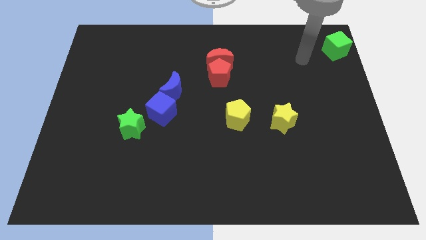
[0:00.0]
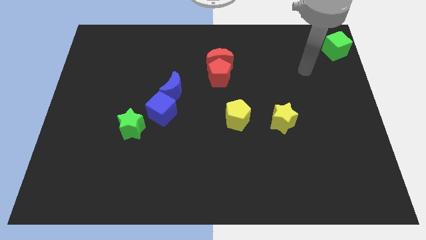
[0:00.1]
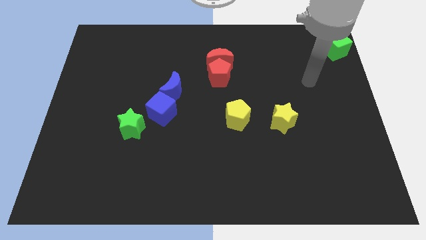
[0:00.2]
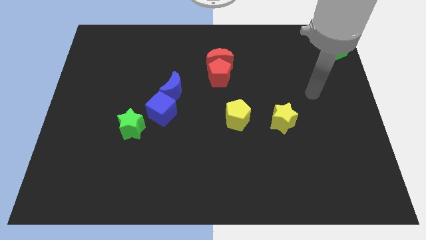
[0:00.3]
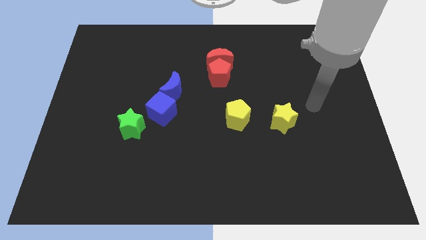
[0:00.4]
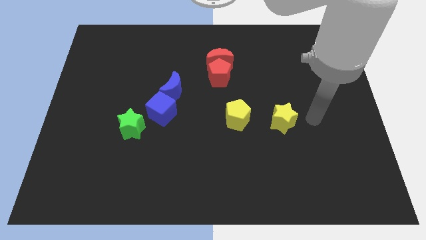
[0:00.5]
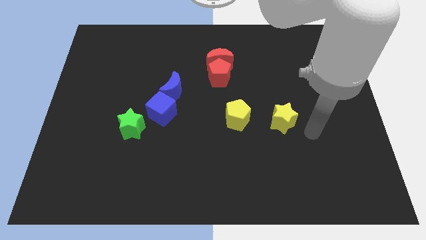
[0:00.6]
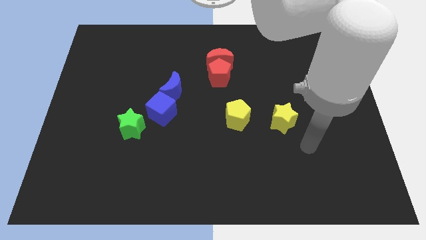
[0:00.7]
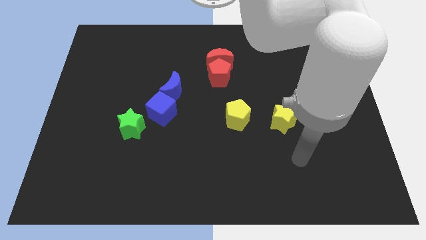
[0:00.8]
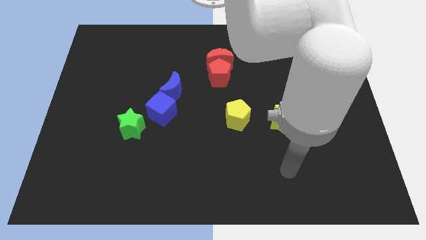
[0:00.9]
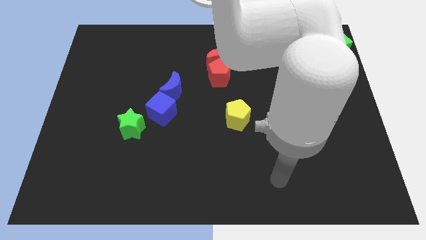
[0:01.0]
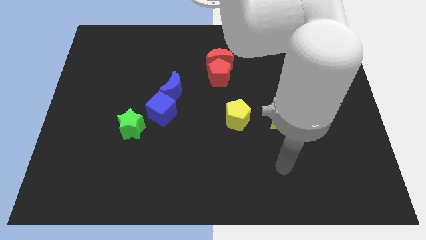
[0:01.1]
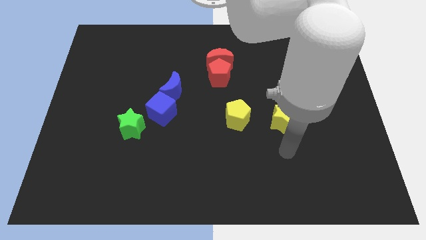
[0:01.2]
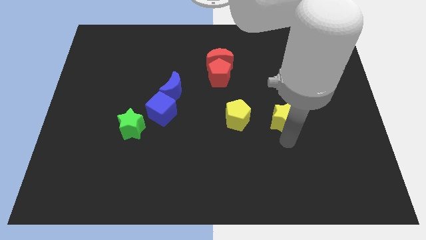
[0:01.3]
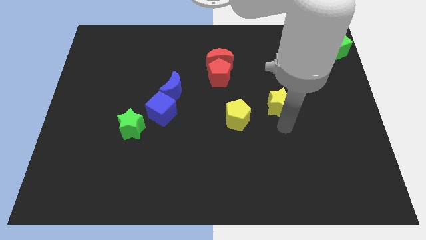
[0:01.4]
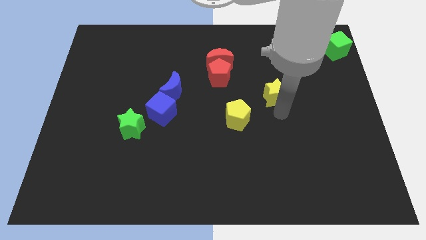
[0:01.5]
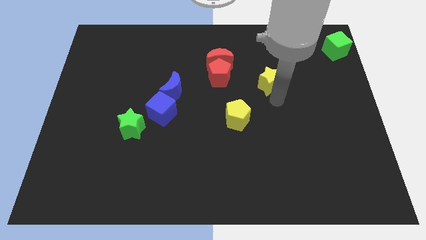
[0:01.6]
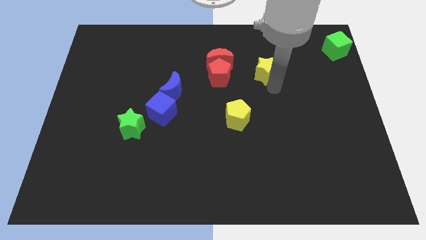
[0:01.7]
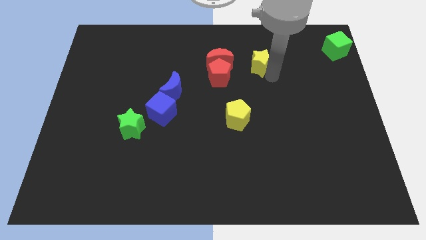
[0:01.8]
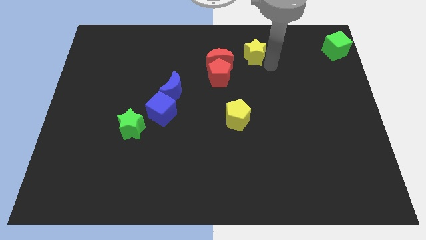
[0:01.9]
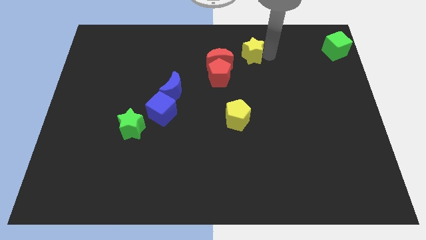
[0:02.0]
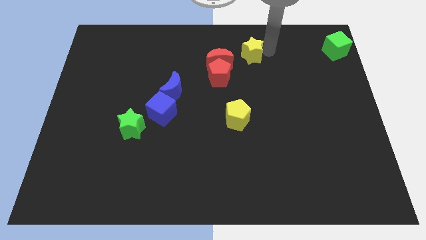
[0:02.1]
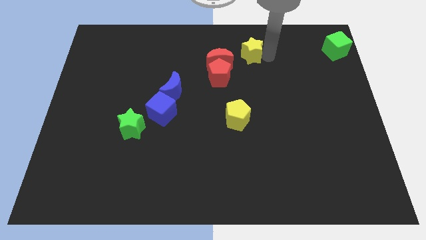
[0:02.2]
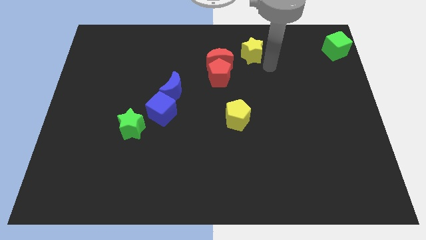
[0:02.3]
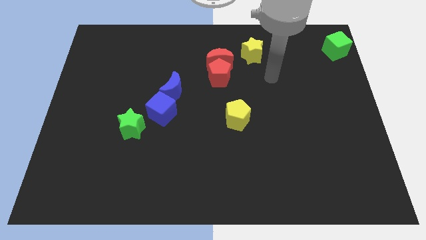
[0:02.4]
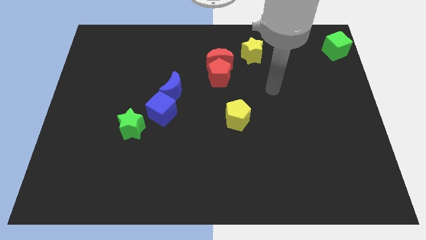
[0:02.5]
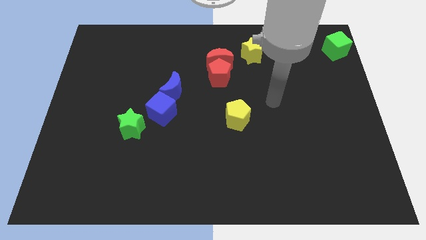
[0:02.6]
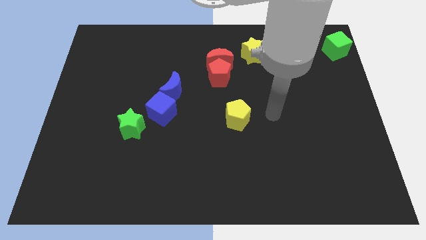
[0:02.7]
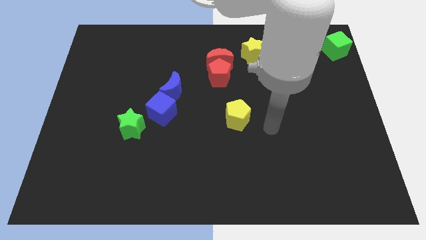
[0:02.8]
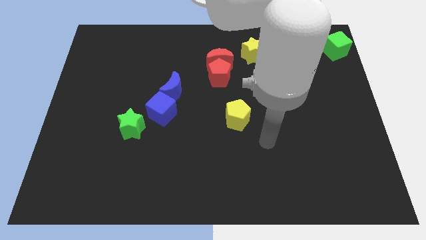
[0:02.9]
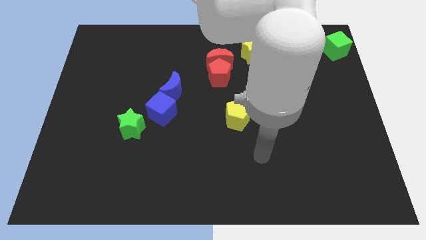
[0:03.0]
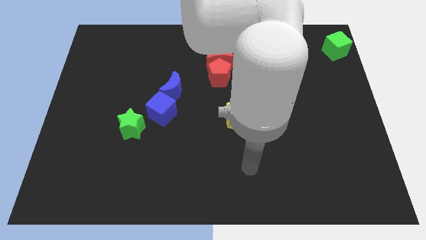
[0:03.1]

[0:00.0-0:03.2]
slide the yellow star diagonally top right to the yellow pentagon

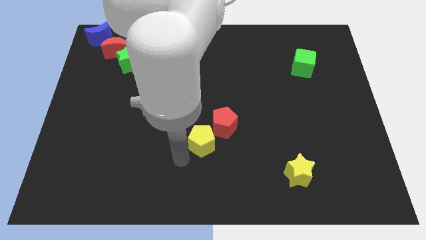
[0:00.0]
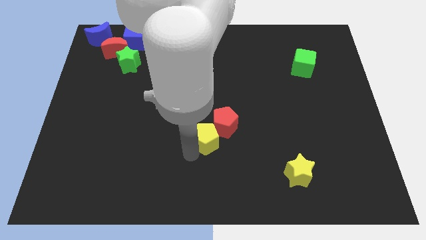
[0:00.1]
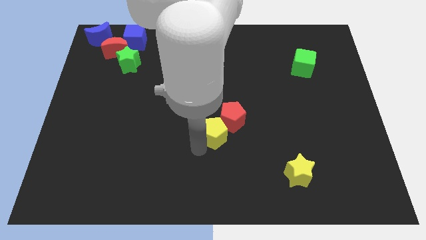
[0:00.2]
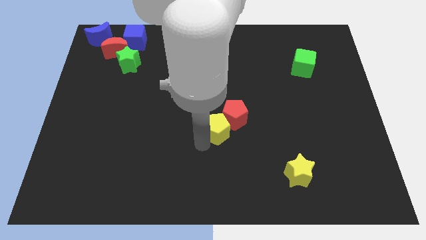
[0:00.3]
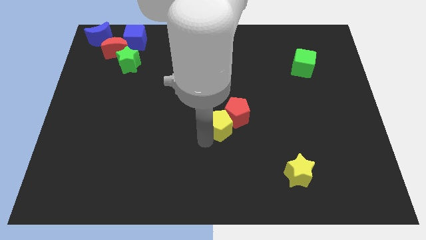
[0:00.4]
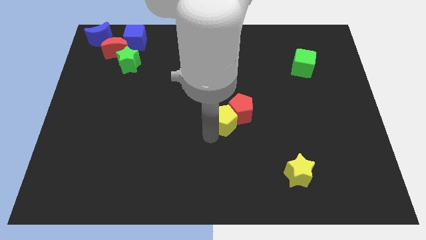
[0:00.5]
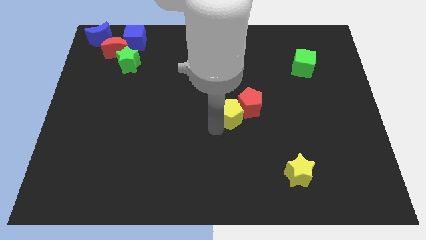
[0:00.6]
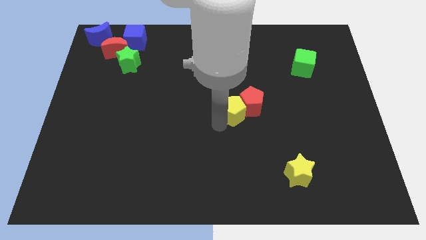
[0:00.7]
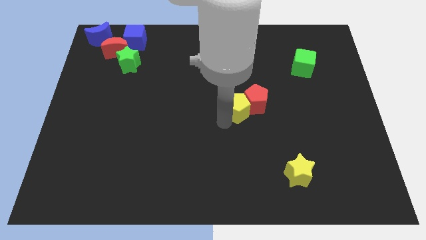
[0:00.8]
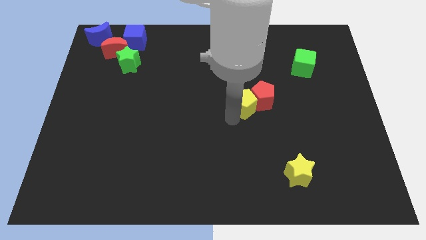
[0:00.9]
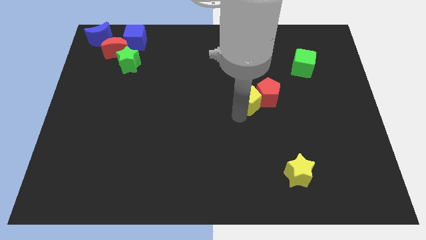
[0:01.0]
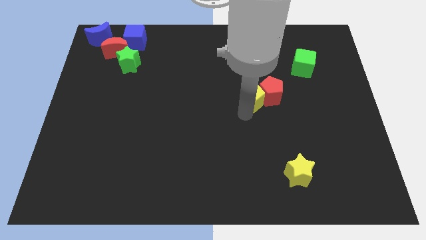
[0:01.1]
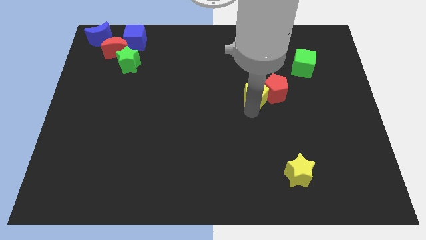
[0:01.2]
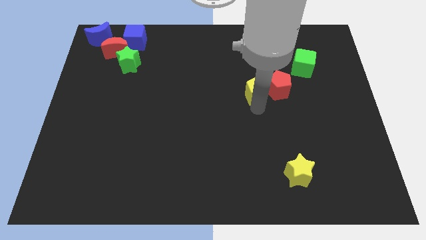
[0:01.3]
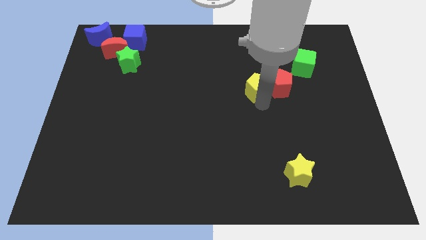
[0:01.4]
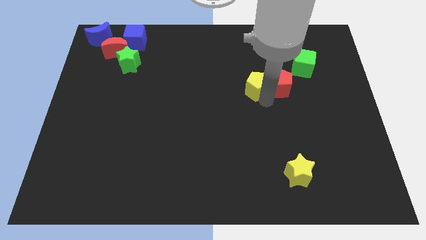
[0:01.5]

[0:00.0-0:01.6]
place yellow pentagon above yellow star

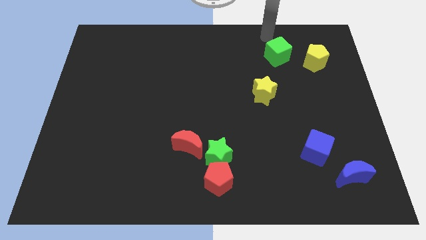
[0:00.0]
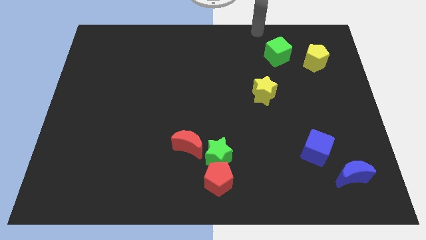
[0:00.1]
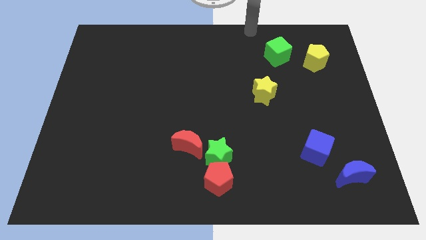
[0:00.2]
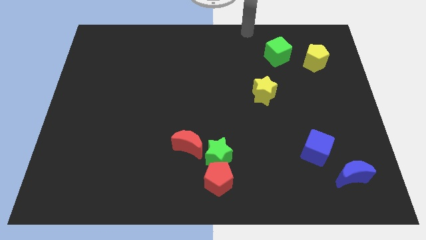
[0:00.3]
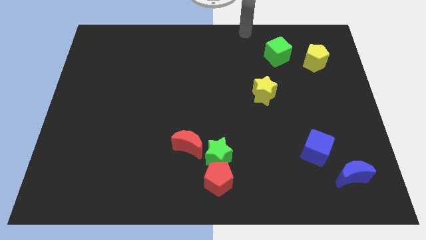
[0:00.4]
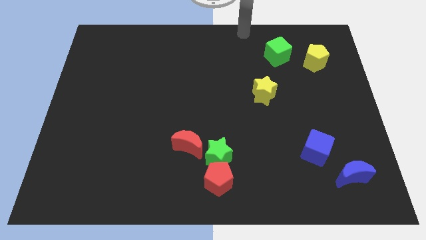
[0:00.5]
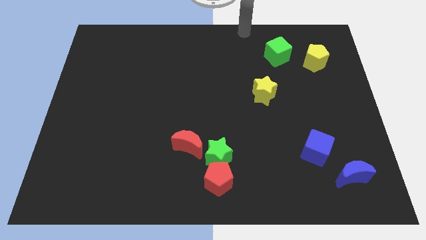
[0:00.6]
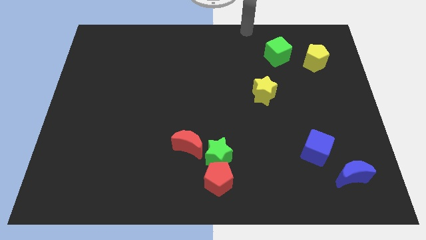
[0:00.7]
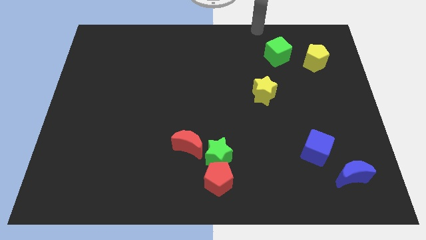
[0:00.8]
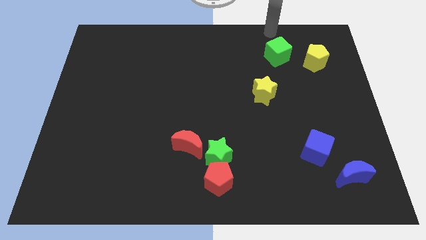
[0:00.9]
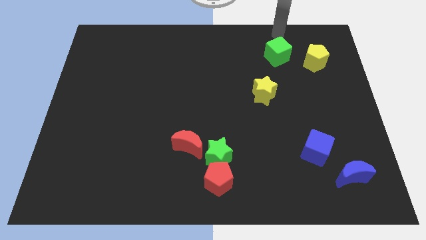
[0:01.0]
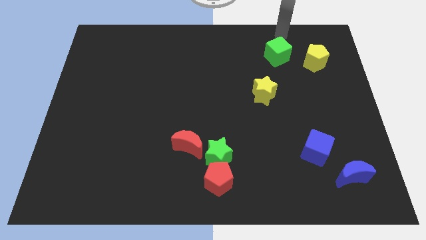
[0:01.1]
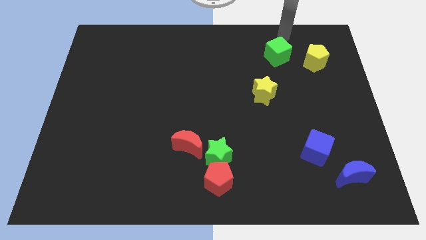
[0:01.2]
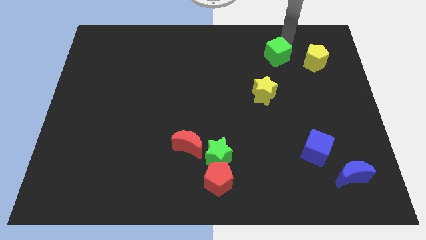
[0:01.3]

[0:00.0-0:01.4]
move the arm close to the green cube

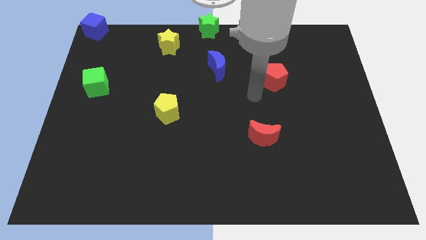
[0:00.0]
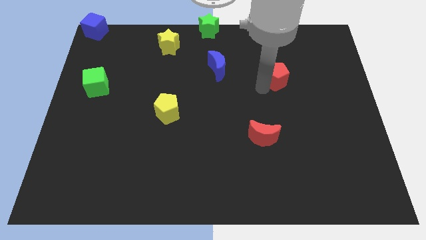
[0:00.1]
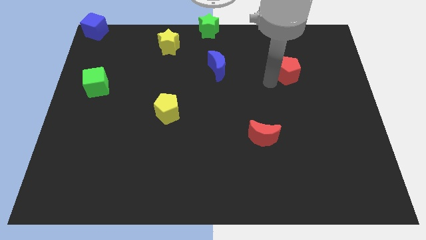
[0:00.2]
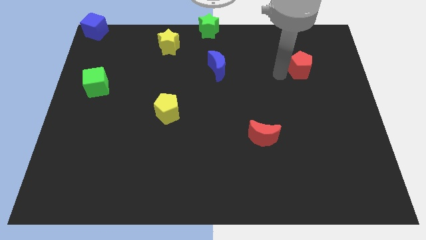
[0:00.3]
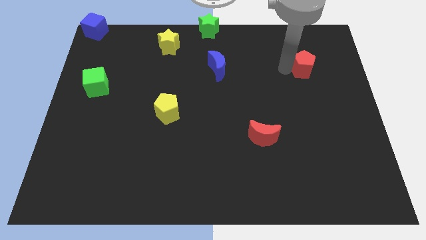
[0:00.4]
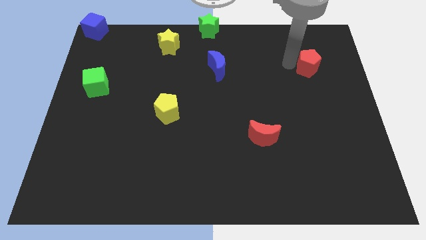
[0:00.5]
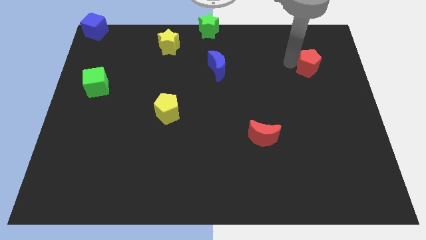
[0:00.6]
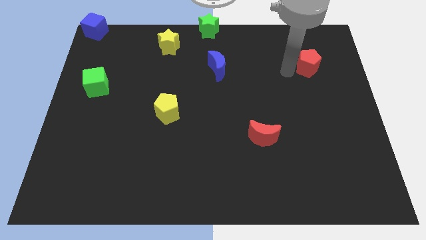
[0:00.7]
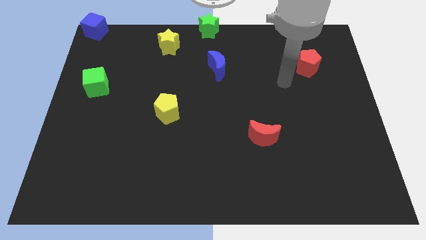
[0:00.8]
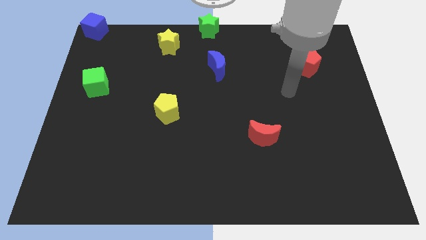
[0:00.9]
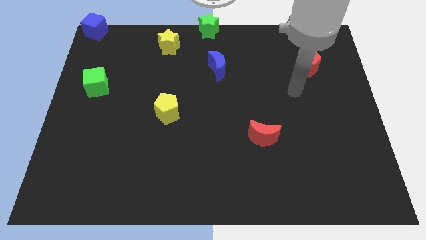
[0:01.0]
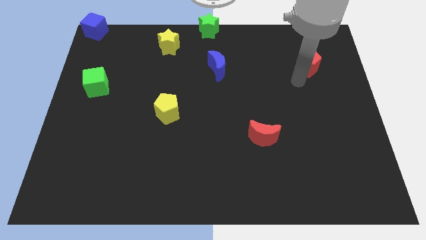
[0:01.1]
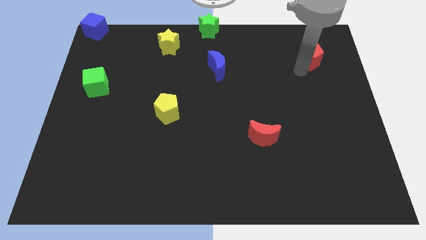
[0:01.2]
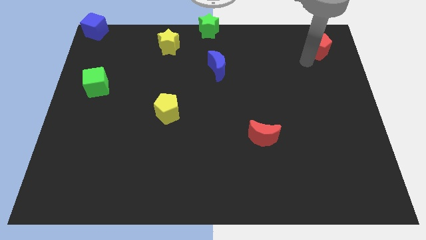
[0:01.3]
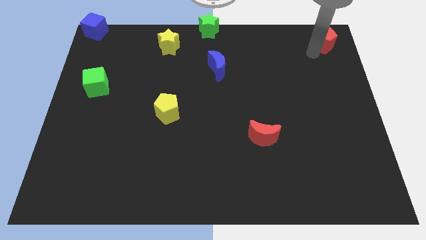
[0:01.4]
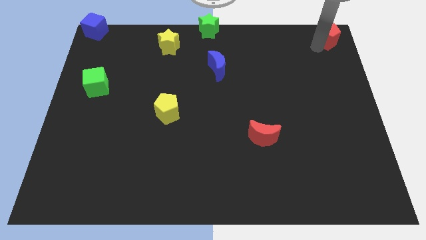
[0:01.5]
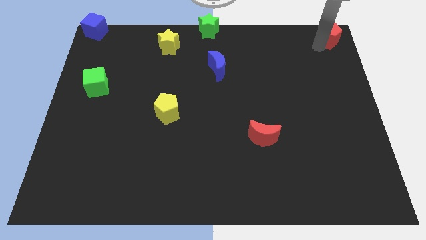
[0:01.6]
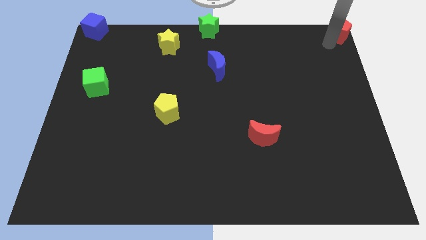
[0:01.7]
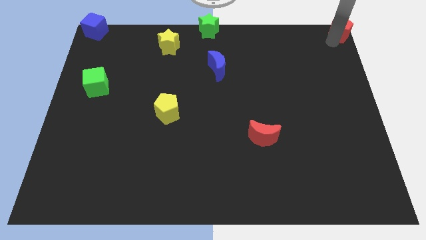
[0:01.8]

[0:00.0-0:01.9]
move the red pentagon to the top right corner of the board

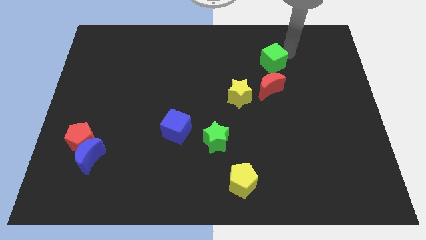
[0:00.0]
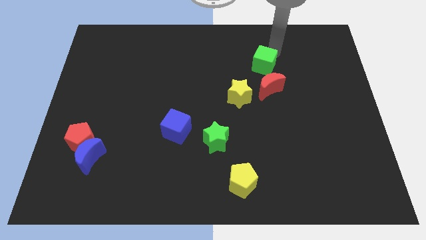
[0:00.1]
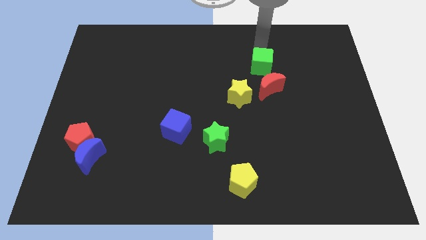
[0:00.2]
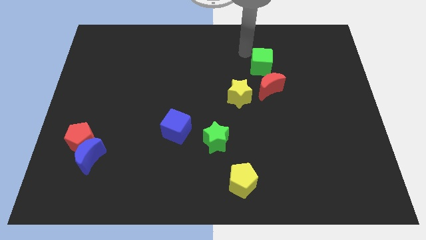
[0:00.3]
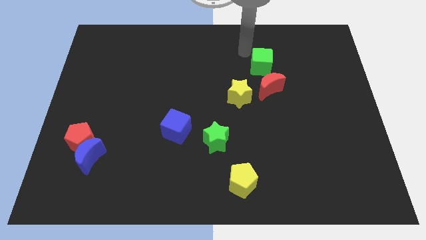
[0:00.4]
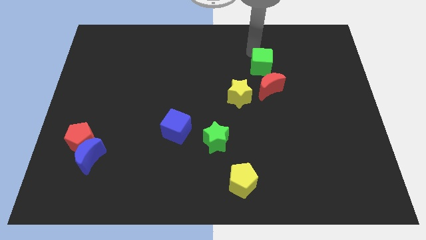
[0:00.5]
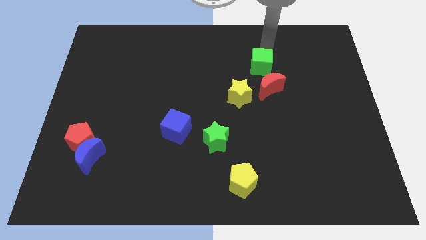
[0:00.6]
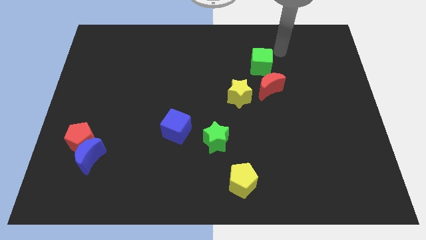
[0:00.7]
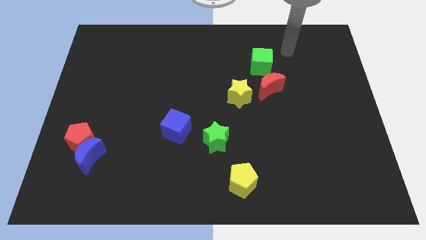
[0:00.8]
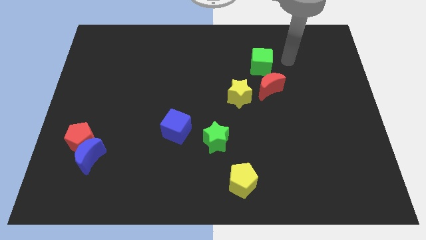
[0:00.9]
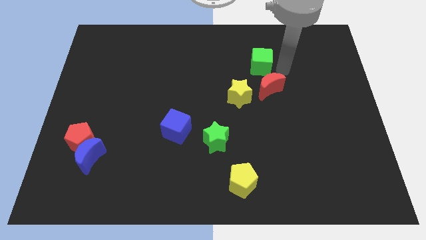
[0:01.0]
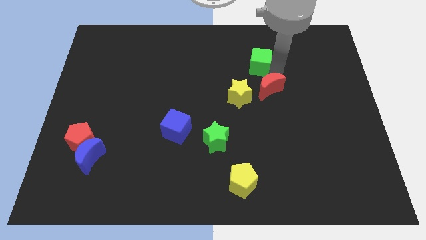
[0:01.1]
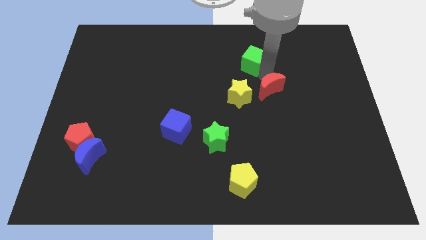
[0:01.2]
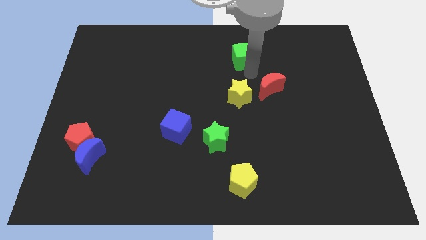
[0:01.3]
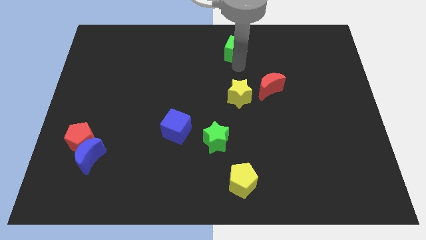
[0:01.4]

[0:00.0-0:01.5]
place the green cube vertically above the yellow star
